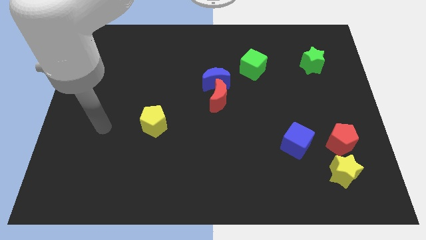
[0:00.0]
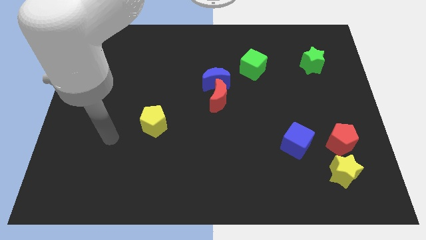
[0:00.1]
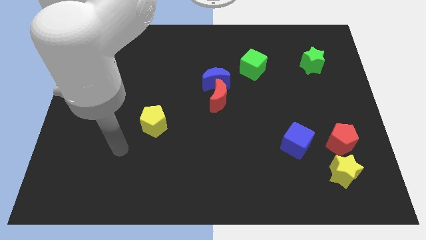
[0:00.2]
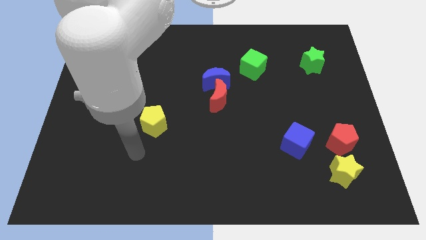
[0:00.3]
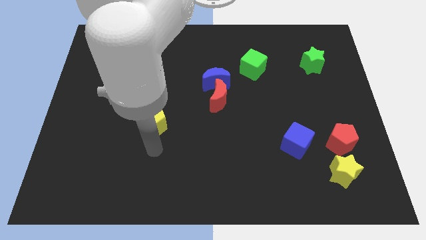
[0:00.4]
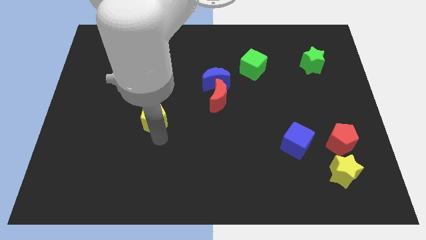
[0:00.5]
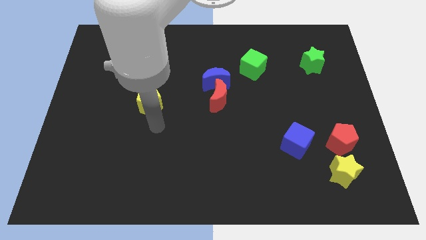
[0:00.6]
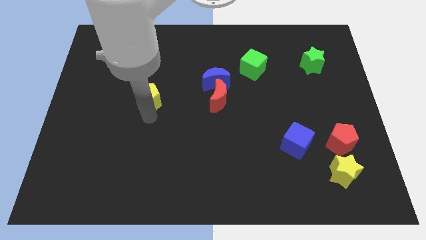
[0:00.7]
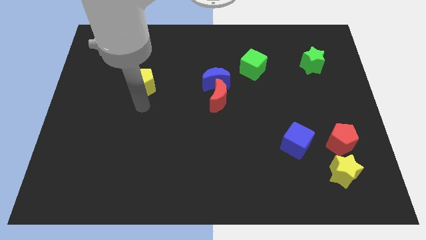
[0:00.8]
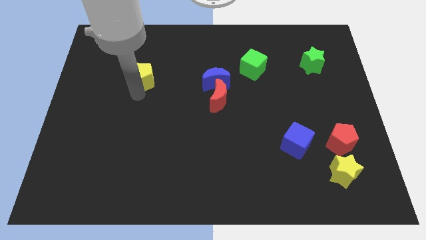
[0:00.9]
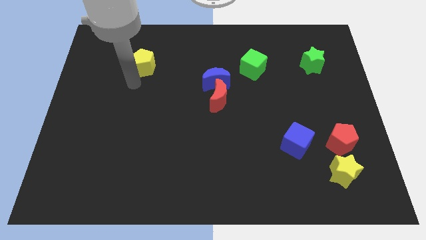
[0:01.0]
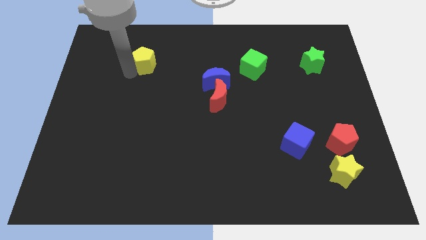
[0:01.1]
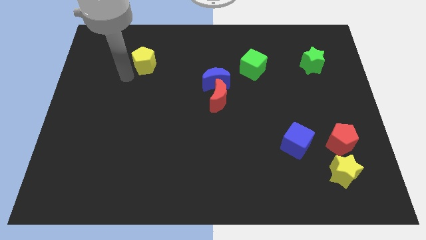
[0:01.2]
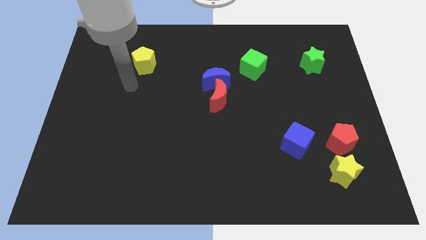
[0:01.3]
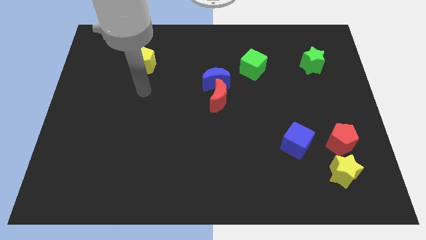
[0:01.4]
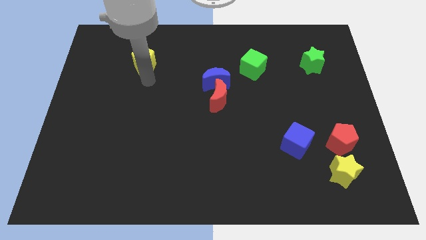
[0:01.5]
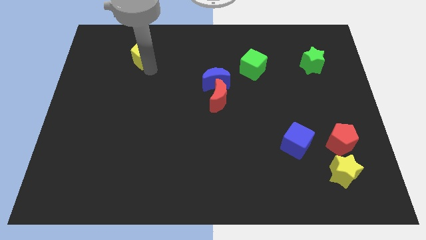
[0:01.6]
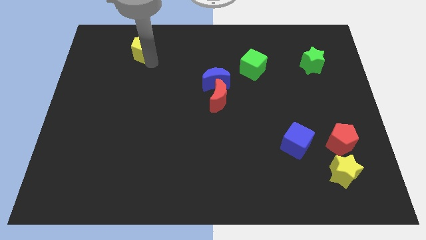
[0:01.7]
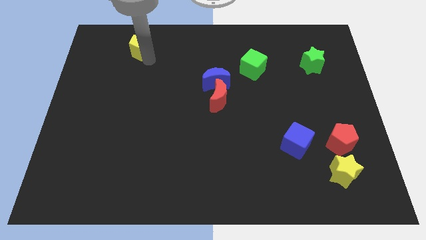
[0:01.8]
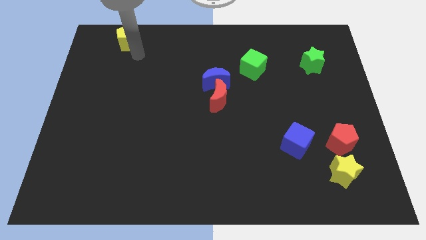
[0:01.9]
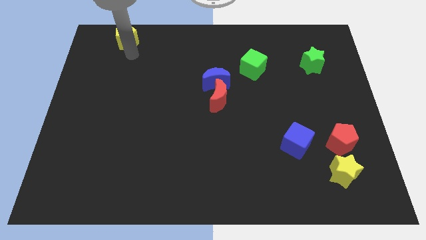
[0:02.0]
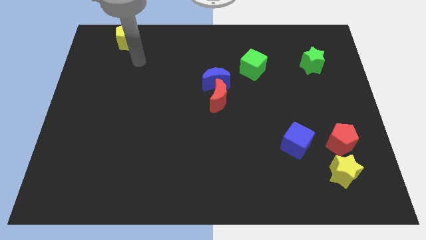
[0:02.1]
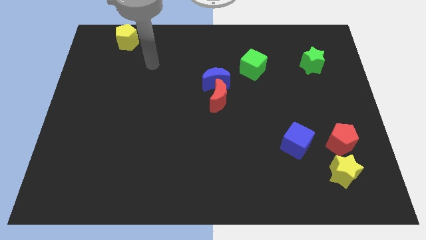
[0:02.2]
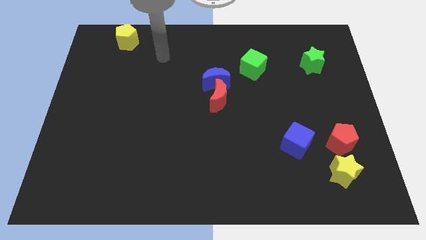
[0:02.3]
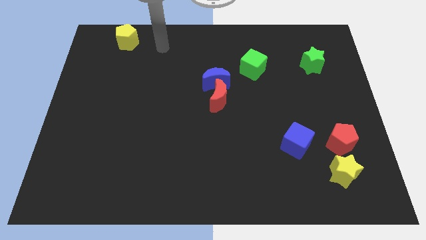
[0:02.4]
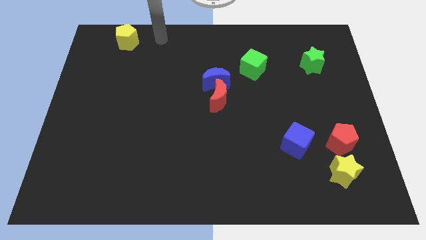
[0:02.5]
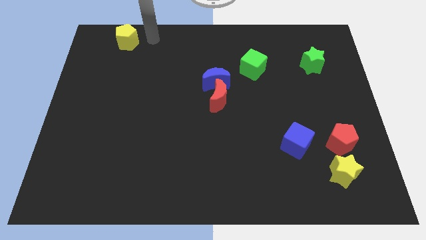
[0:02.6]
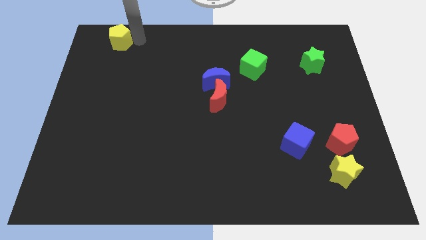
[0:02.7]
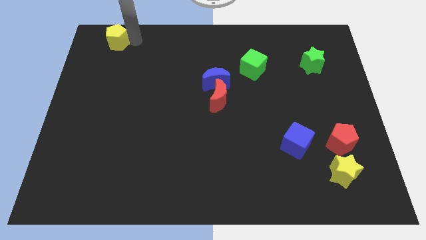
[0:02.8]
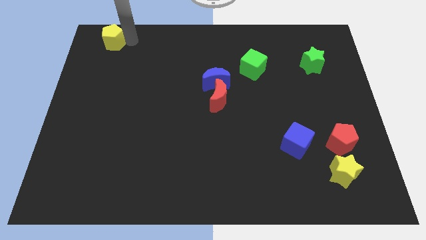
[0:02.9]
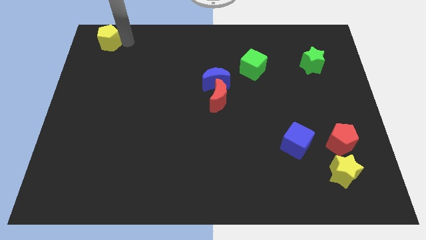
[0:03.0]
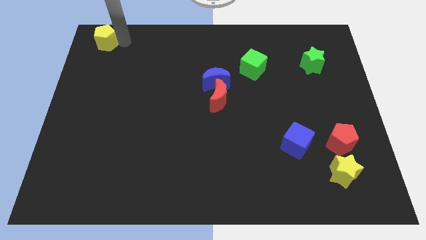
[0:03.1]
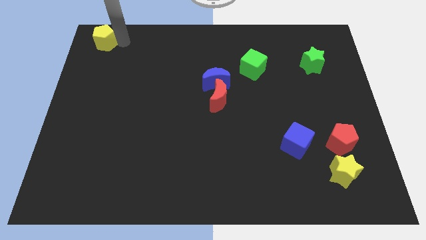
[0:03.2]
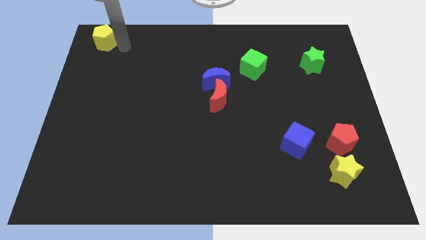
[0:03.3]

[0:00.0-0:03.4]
push the yellow pentagon to the top left side of the board

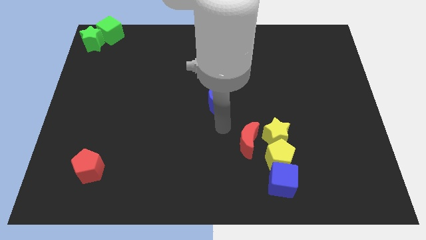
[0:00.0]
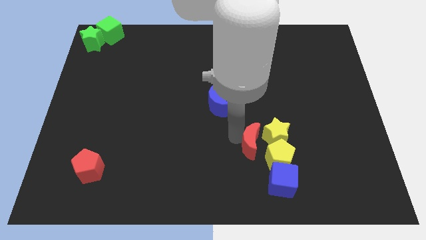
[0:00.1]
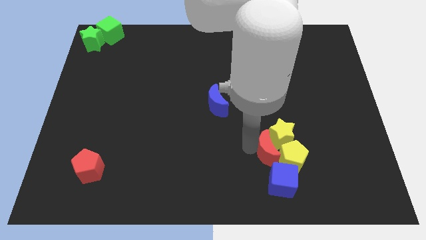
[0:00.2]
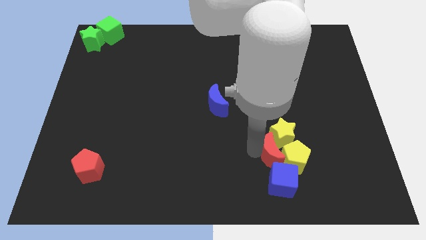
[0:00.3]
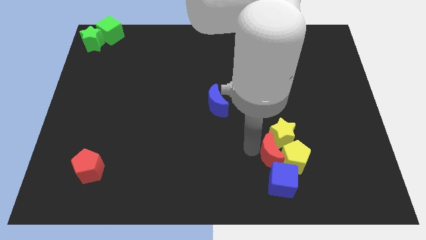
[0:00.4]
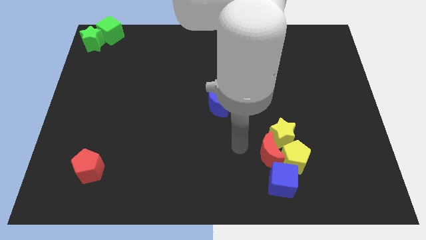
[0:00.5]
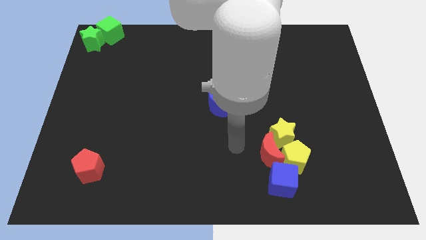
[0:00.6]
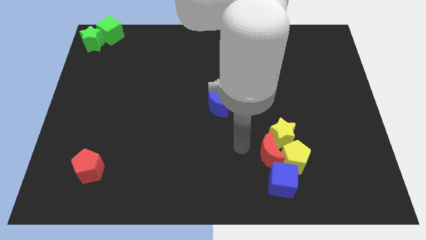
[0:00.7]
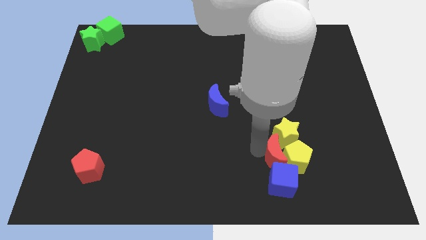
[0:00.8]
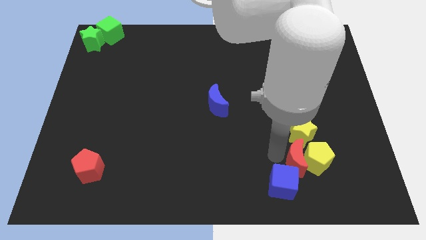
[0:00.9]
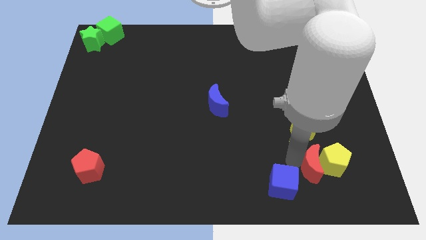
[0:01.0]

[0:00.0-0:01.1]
move red crescent into yellow pentagon

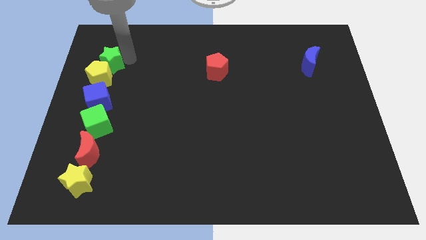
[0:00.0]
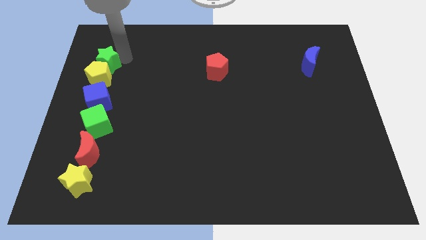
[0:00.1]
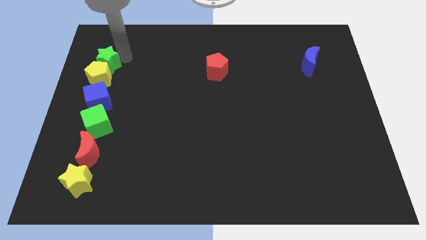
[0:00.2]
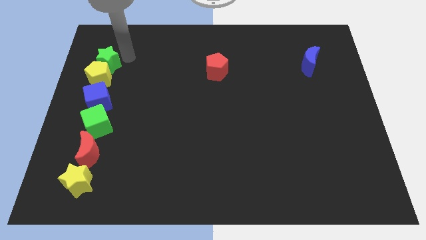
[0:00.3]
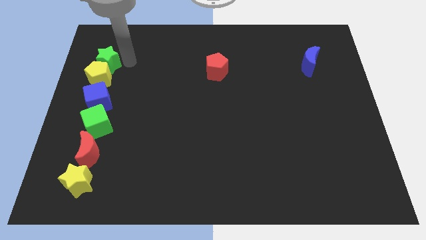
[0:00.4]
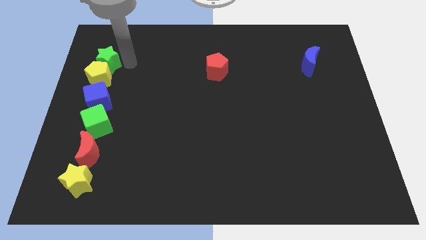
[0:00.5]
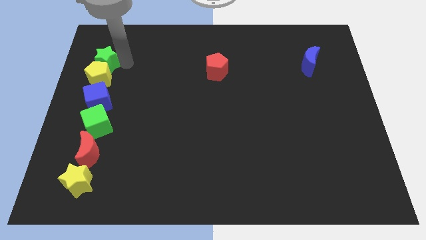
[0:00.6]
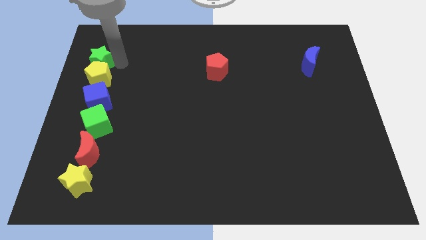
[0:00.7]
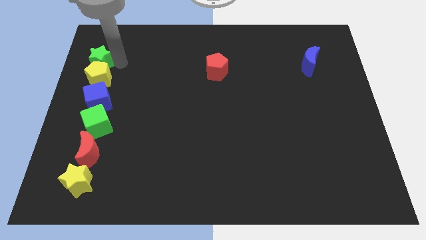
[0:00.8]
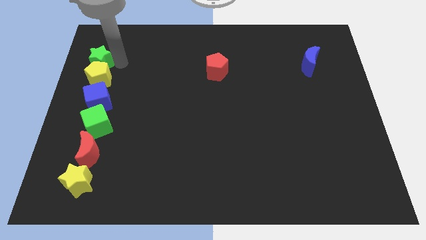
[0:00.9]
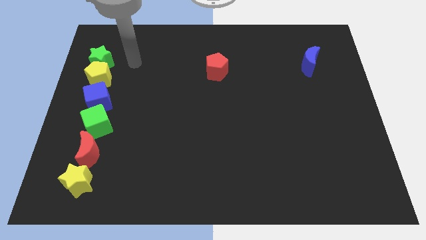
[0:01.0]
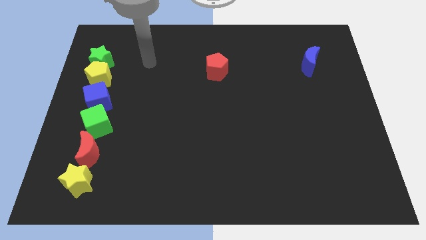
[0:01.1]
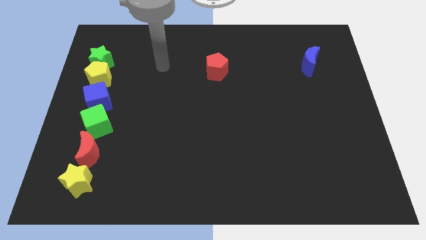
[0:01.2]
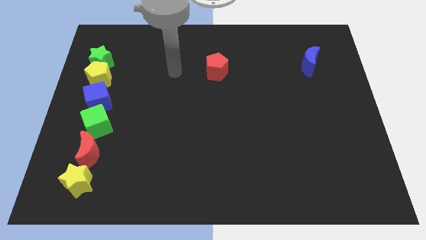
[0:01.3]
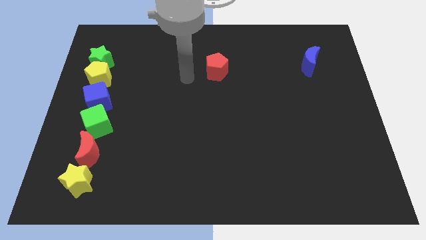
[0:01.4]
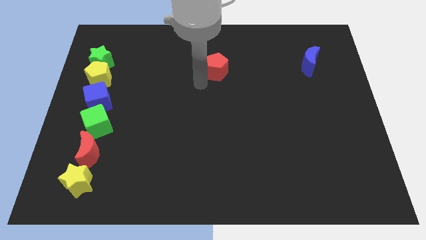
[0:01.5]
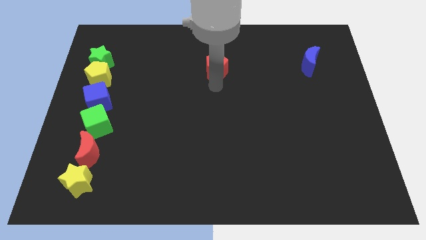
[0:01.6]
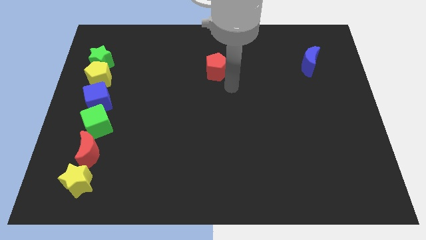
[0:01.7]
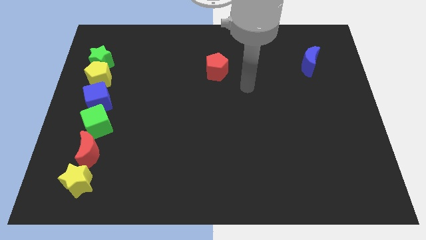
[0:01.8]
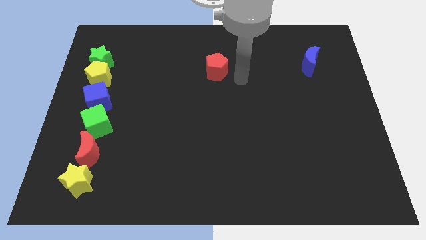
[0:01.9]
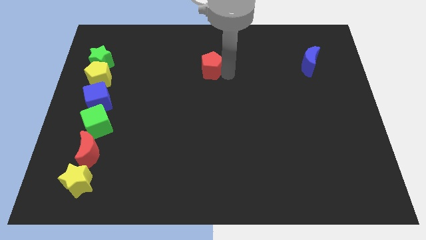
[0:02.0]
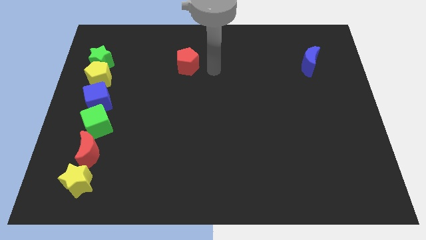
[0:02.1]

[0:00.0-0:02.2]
slightly move the red pentagon towards left

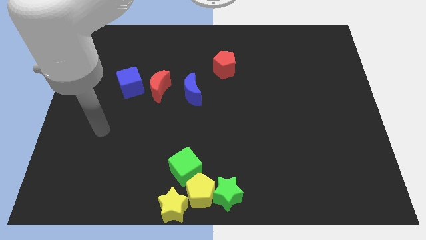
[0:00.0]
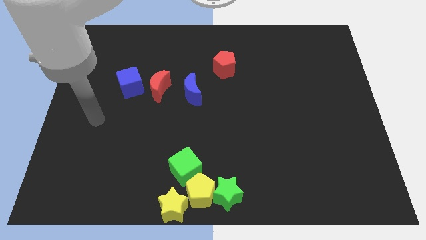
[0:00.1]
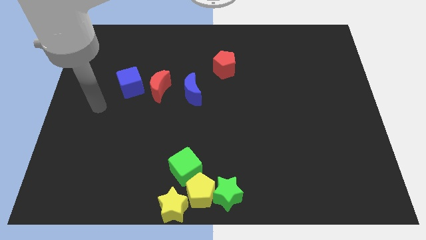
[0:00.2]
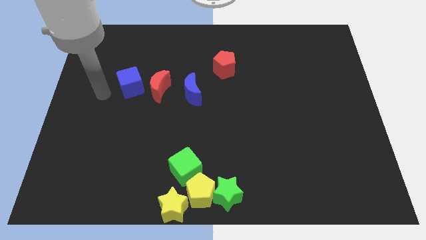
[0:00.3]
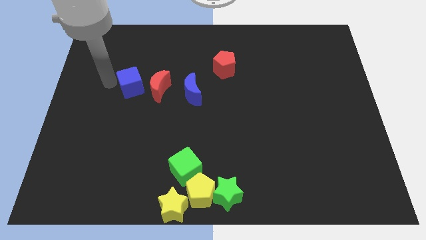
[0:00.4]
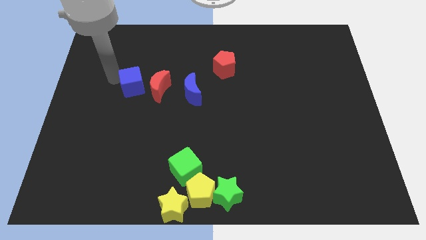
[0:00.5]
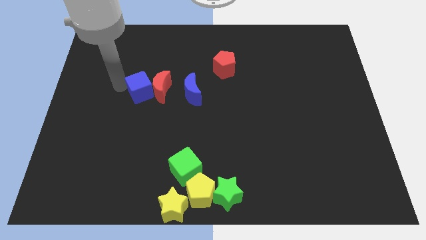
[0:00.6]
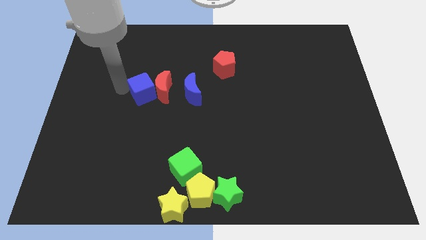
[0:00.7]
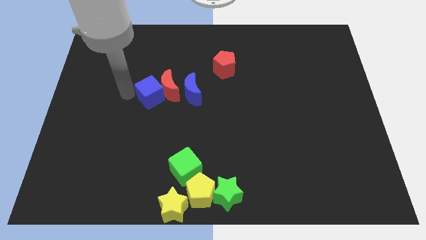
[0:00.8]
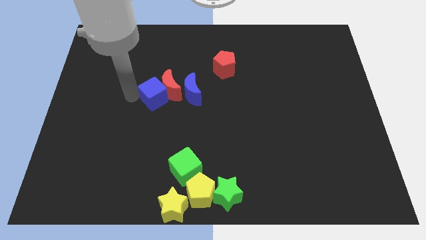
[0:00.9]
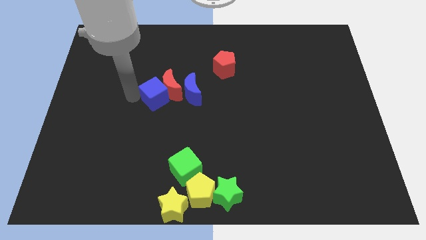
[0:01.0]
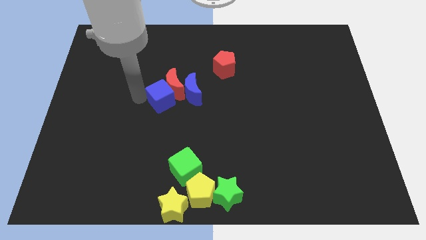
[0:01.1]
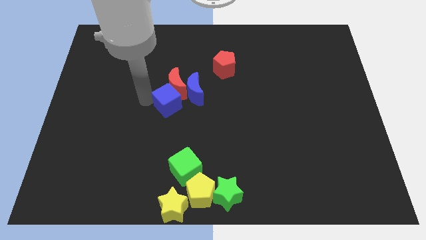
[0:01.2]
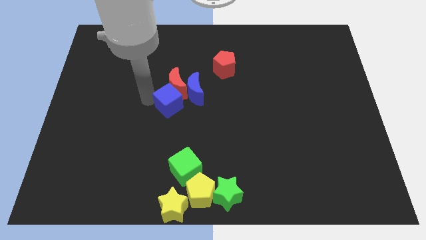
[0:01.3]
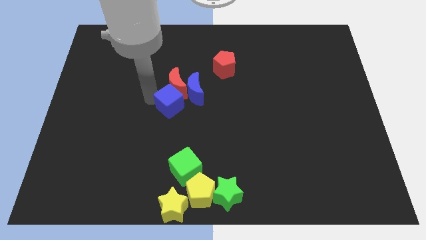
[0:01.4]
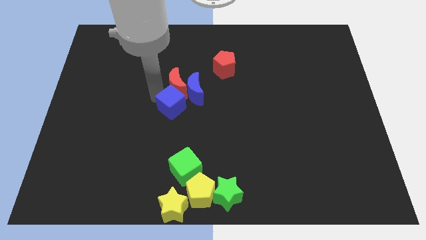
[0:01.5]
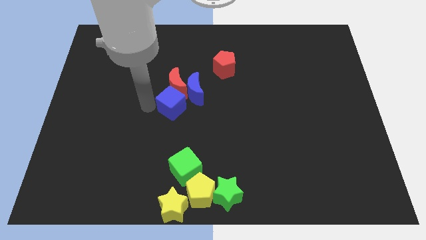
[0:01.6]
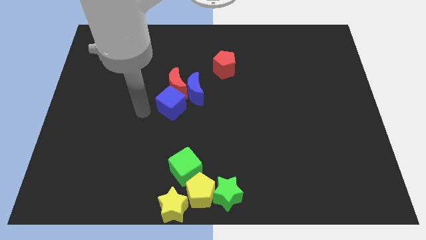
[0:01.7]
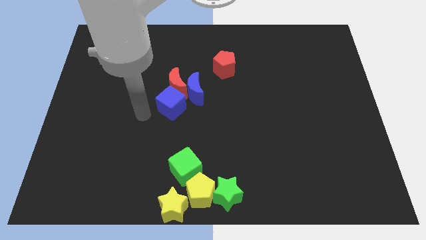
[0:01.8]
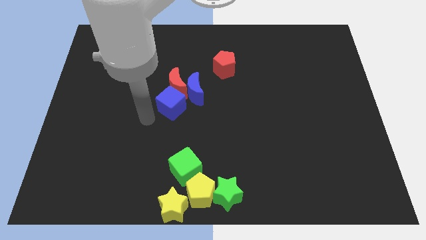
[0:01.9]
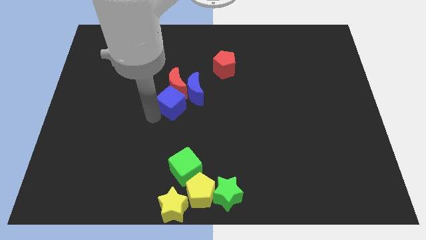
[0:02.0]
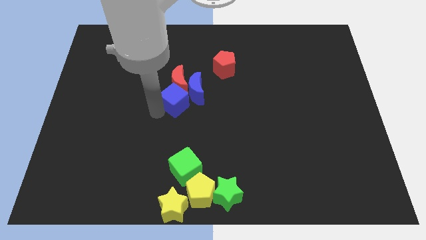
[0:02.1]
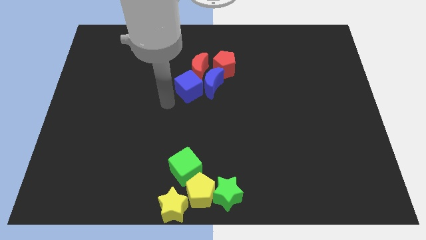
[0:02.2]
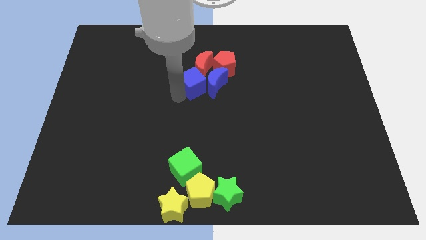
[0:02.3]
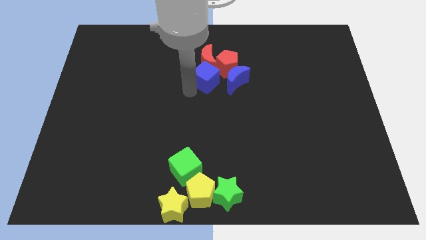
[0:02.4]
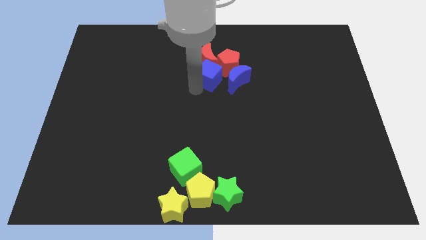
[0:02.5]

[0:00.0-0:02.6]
move the blue cube into the red moon
